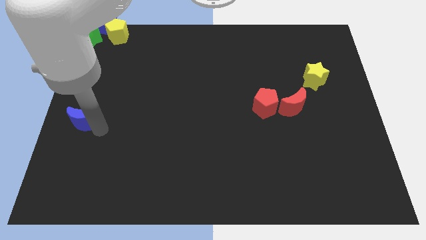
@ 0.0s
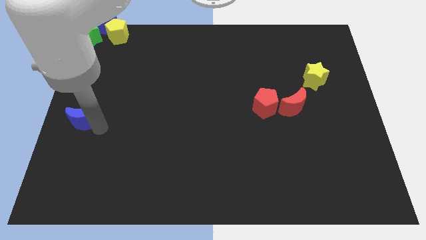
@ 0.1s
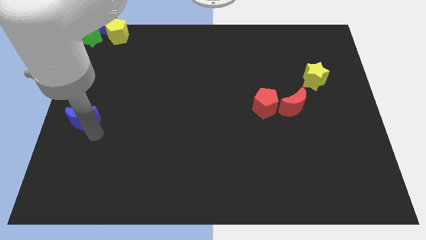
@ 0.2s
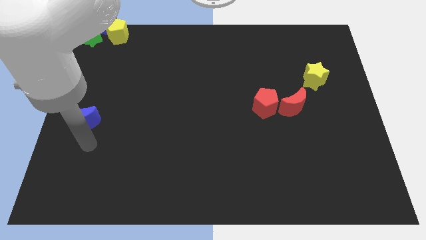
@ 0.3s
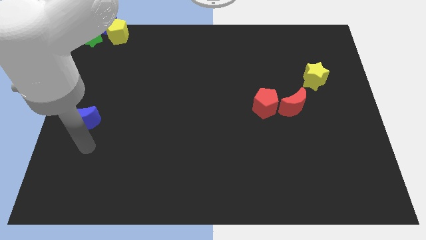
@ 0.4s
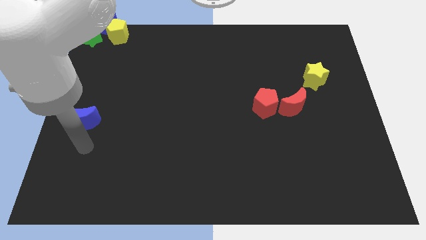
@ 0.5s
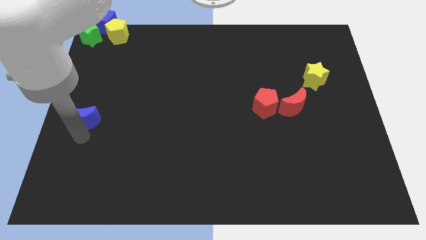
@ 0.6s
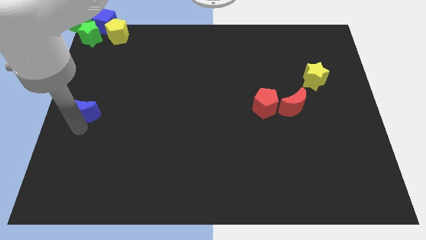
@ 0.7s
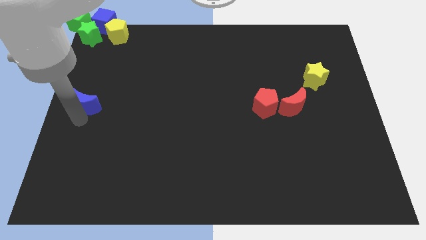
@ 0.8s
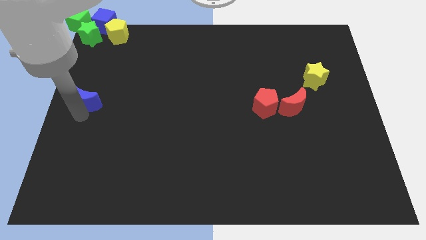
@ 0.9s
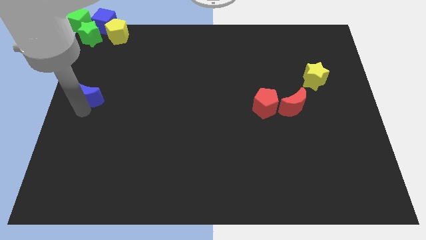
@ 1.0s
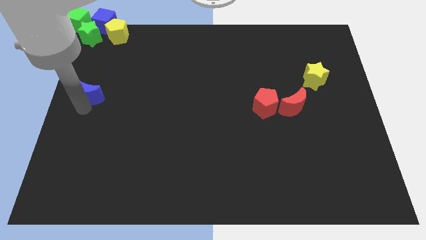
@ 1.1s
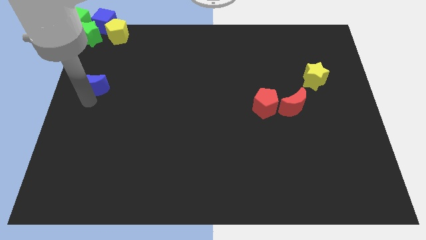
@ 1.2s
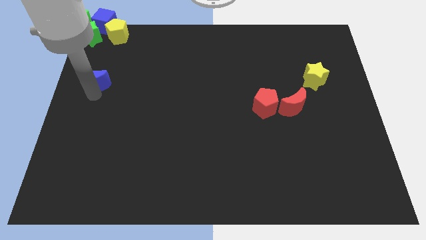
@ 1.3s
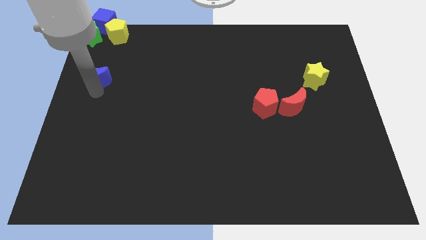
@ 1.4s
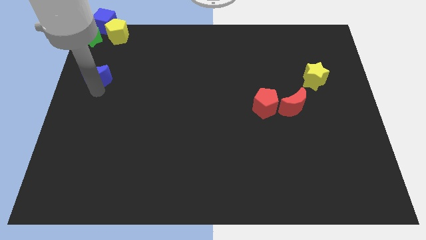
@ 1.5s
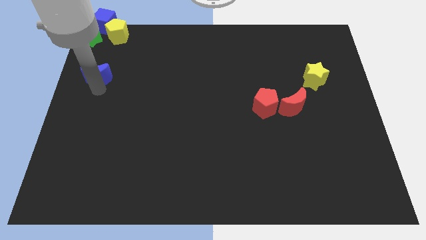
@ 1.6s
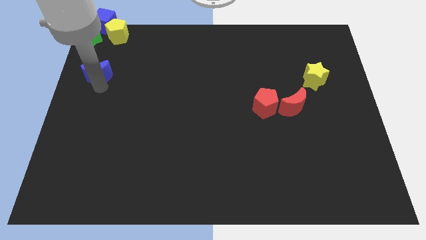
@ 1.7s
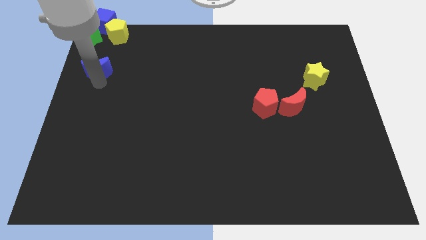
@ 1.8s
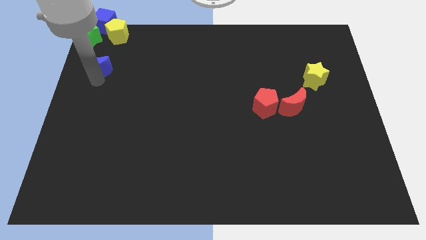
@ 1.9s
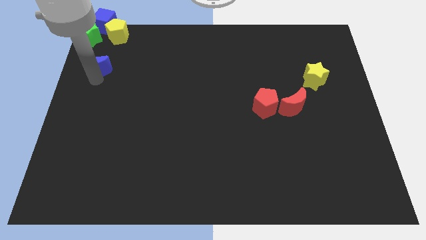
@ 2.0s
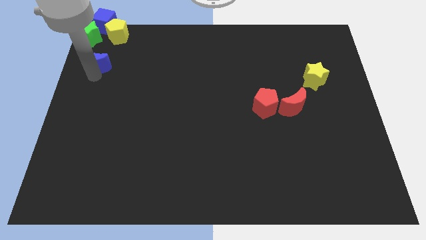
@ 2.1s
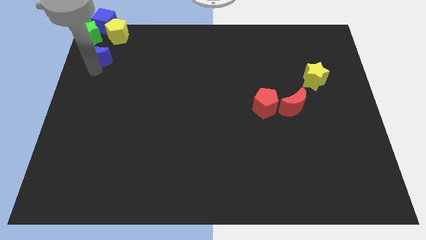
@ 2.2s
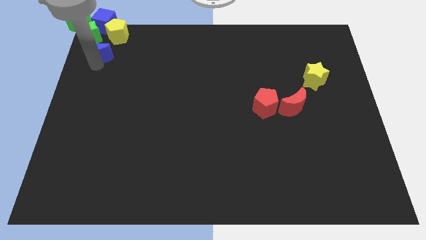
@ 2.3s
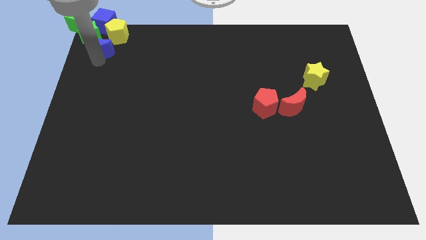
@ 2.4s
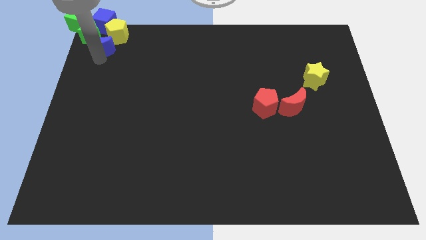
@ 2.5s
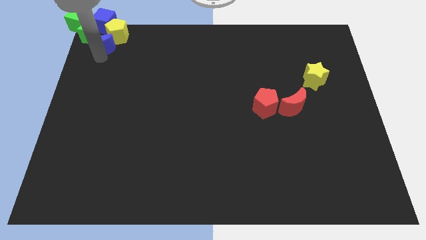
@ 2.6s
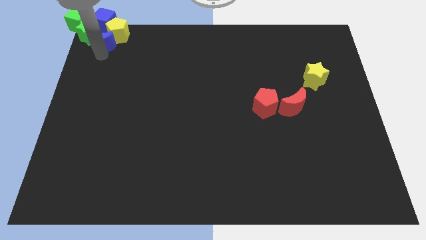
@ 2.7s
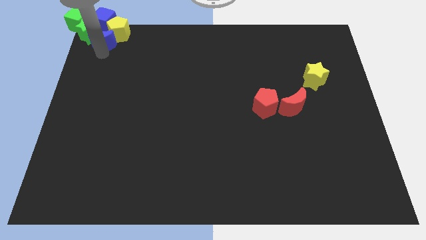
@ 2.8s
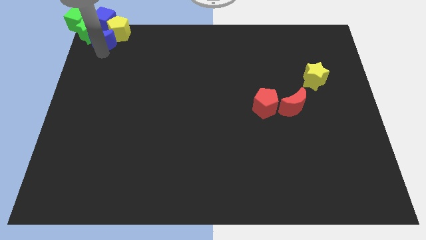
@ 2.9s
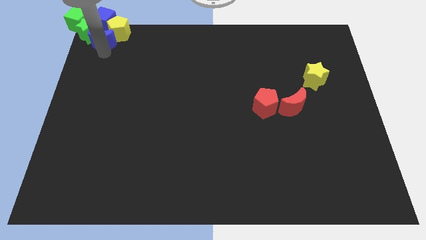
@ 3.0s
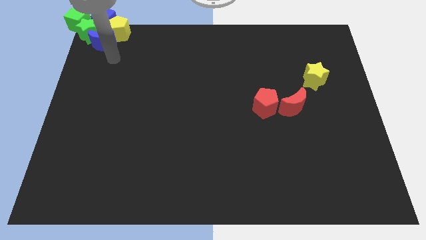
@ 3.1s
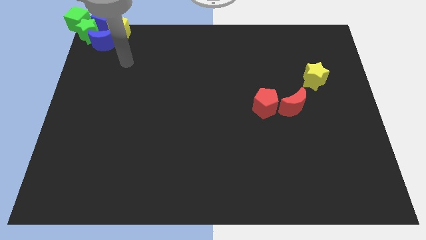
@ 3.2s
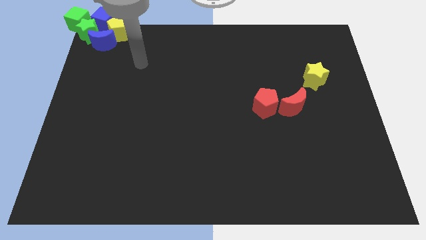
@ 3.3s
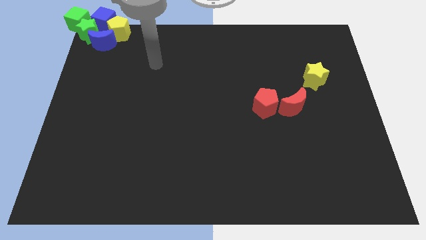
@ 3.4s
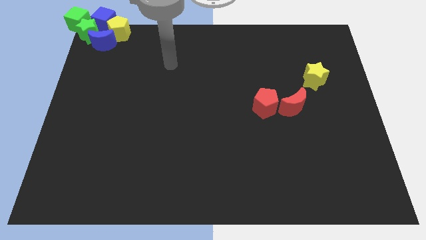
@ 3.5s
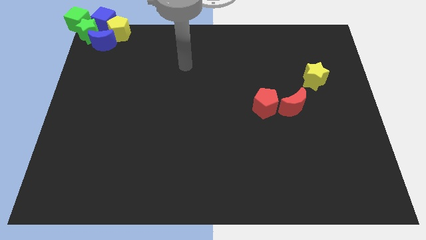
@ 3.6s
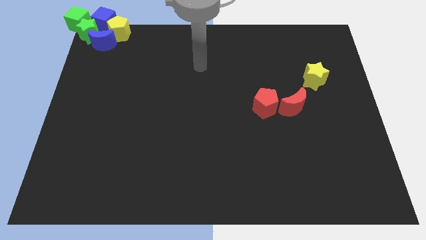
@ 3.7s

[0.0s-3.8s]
push the blue moon into the group of blocks

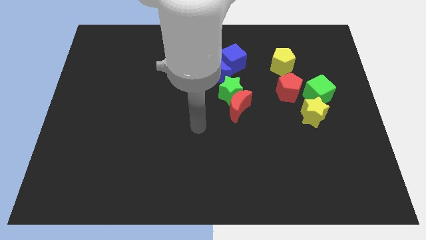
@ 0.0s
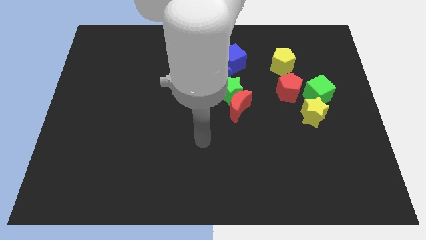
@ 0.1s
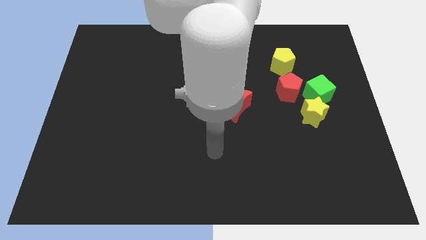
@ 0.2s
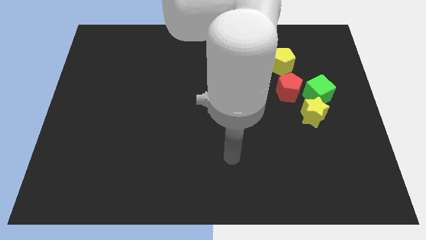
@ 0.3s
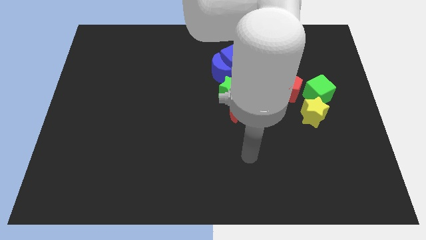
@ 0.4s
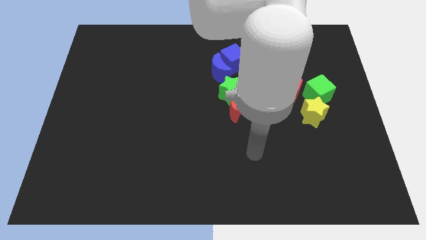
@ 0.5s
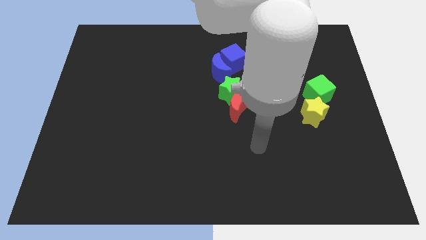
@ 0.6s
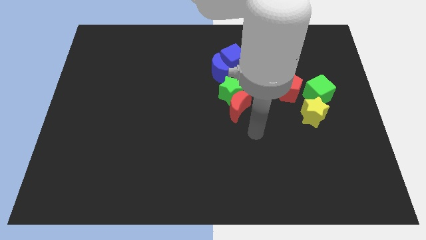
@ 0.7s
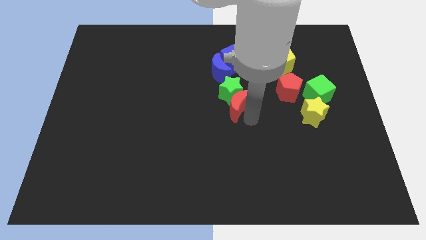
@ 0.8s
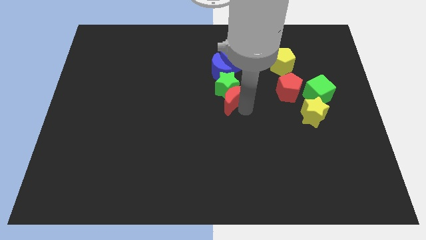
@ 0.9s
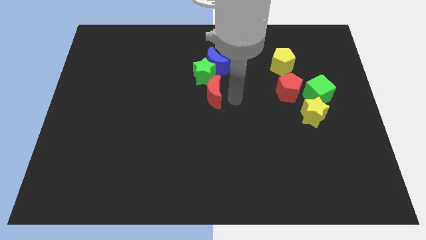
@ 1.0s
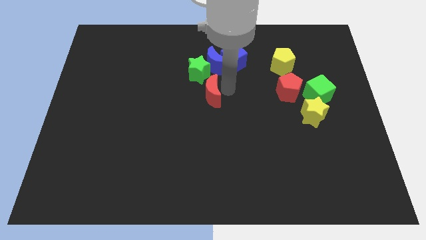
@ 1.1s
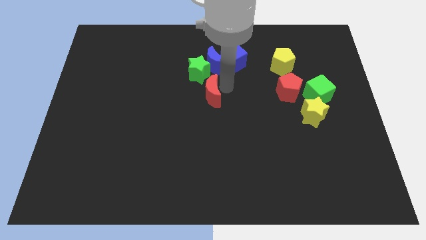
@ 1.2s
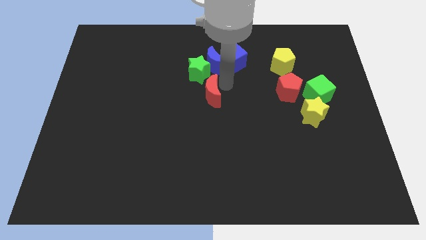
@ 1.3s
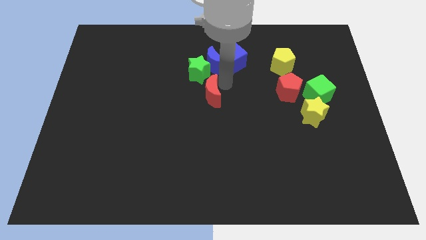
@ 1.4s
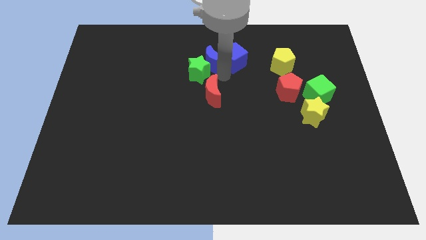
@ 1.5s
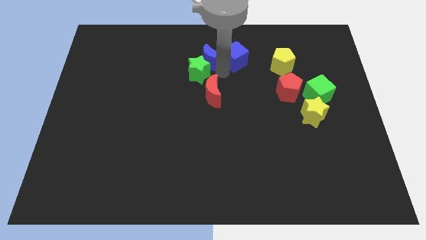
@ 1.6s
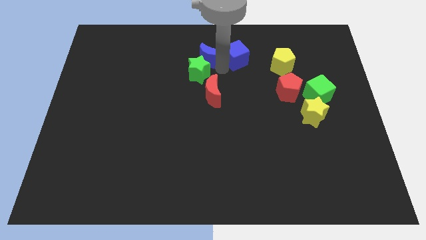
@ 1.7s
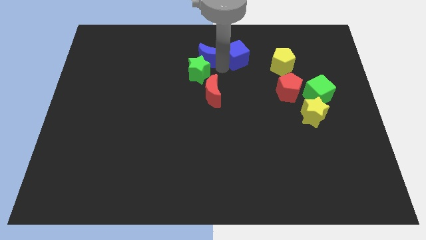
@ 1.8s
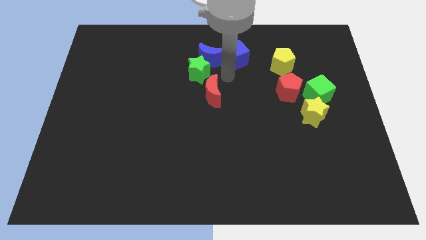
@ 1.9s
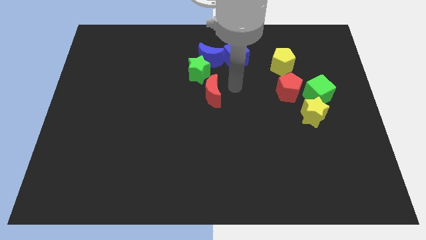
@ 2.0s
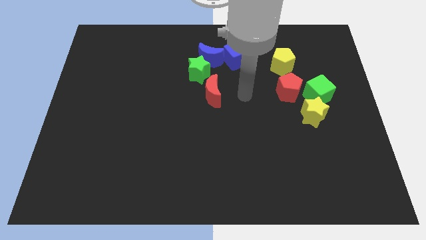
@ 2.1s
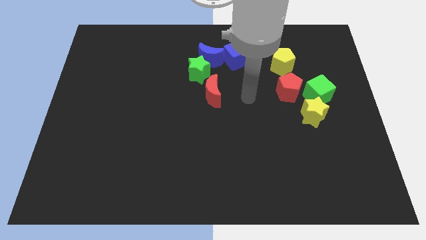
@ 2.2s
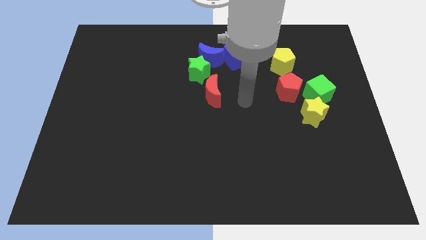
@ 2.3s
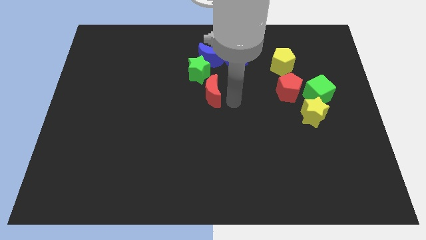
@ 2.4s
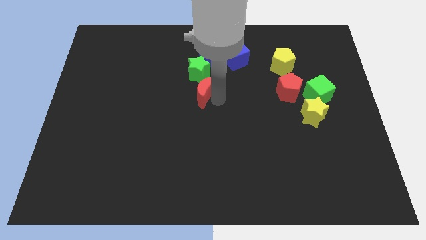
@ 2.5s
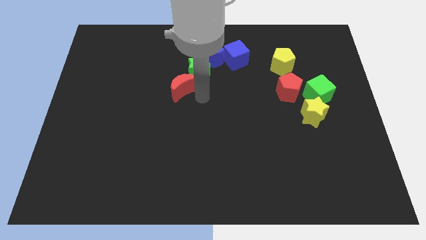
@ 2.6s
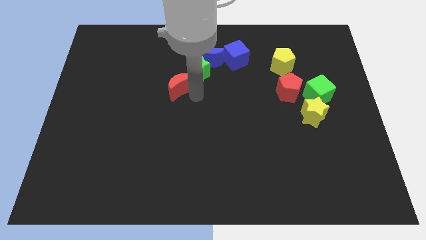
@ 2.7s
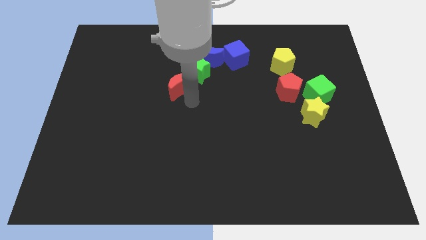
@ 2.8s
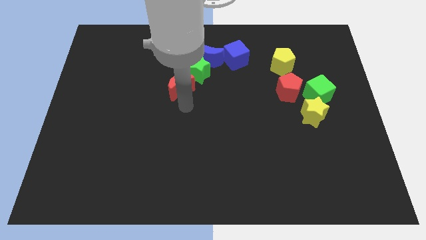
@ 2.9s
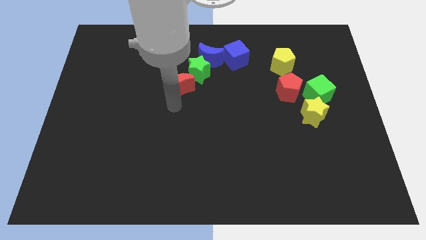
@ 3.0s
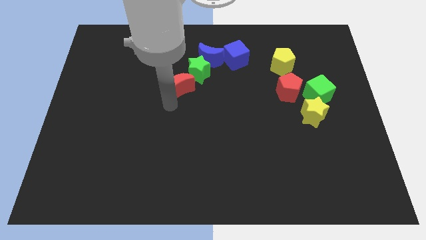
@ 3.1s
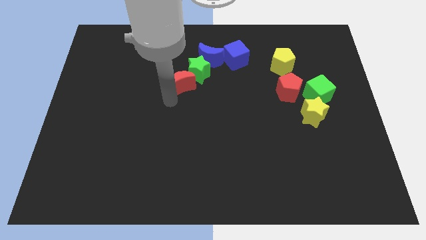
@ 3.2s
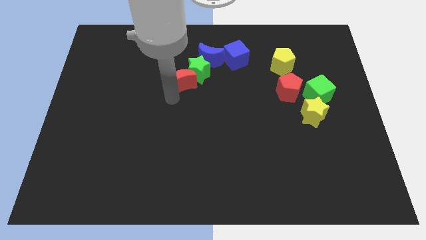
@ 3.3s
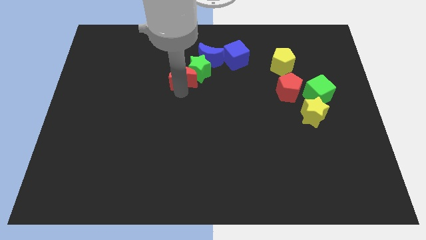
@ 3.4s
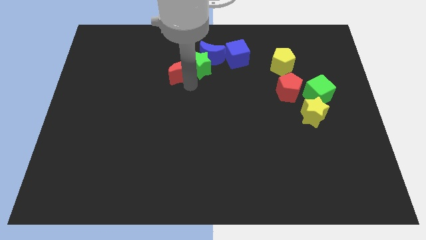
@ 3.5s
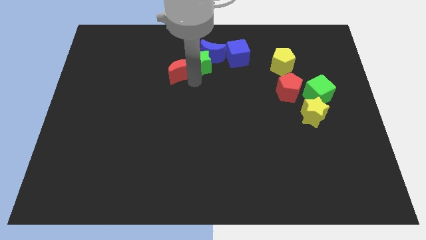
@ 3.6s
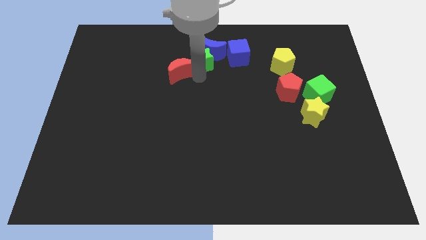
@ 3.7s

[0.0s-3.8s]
move the green star and red moon to the left side of the blue blocks

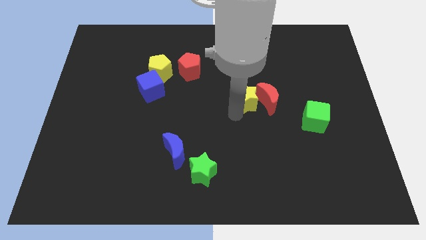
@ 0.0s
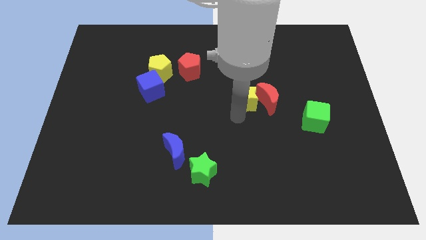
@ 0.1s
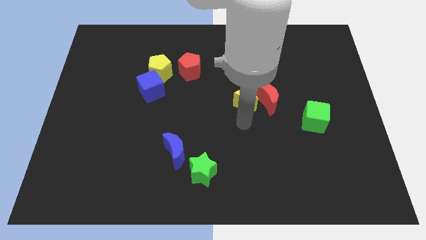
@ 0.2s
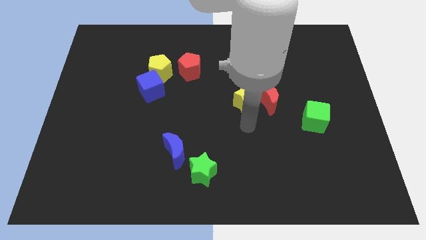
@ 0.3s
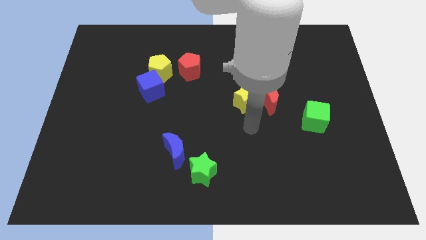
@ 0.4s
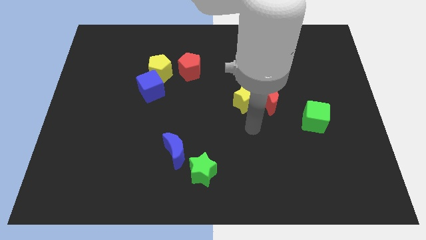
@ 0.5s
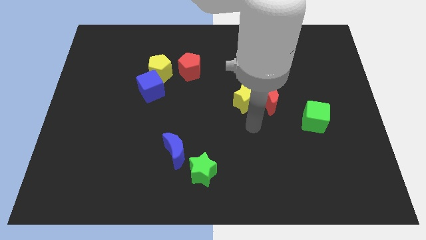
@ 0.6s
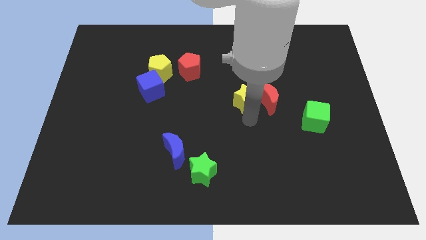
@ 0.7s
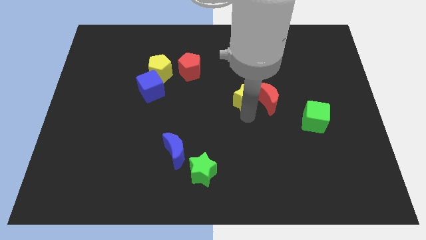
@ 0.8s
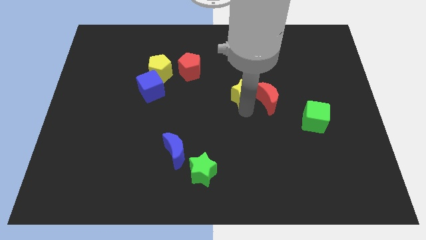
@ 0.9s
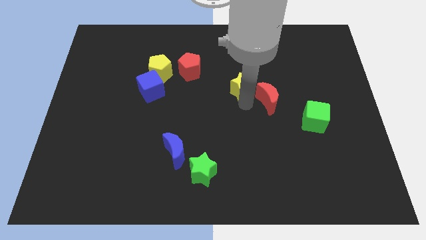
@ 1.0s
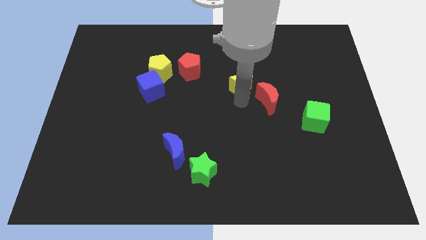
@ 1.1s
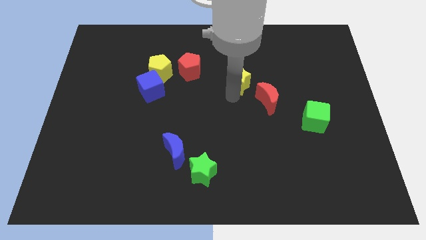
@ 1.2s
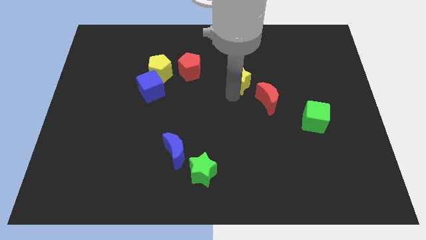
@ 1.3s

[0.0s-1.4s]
move the yellow star close to the red pentagon
